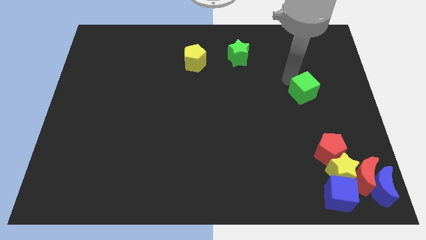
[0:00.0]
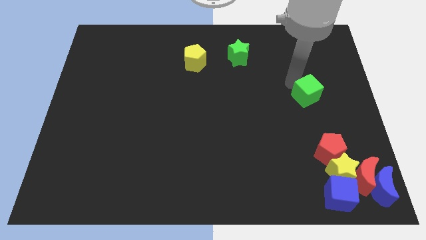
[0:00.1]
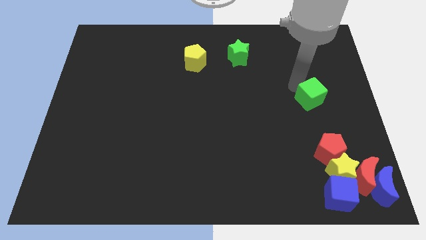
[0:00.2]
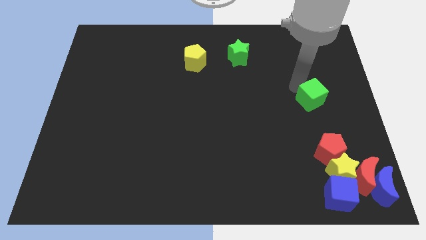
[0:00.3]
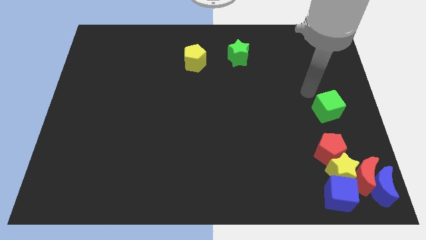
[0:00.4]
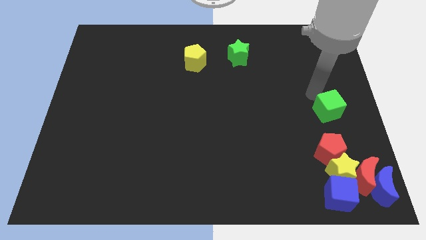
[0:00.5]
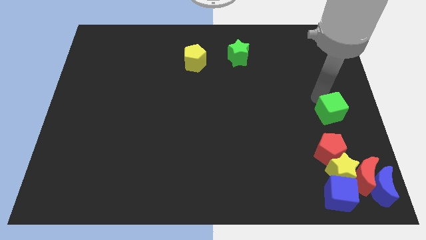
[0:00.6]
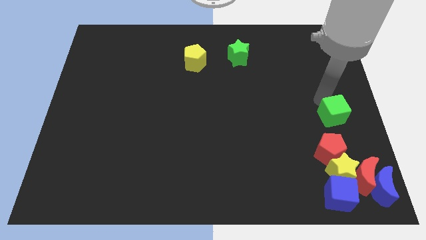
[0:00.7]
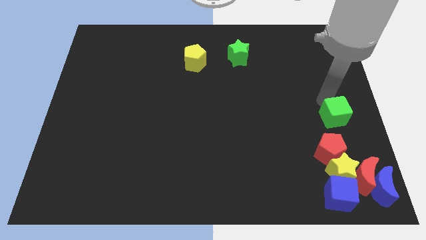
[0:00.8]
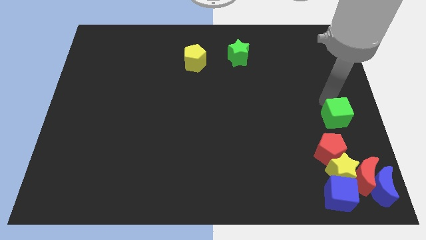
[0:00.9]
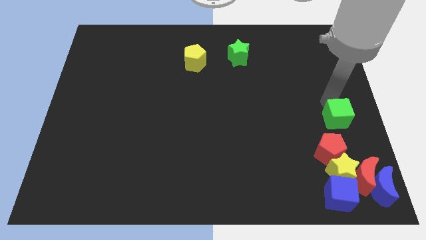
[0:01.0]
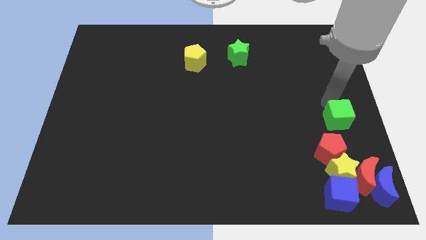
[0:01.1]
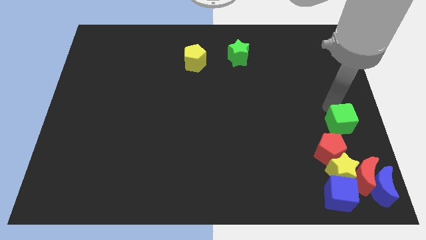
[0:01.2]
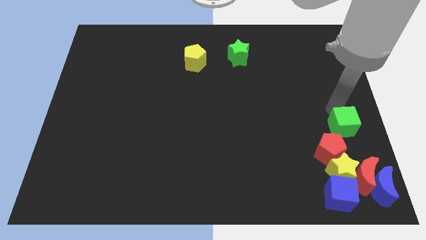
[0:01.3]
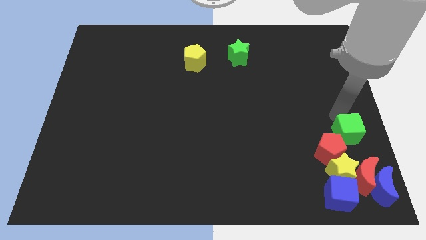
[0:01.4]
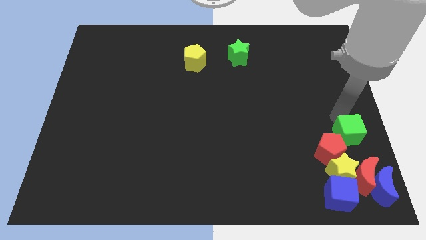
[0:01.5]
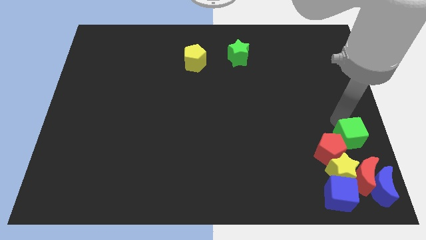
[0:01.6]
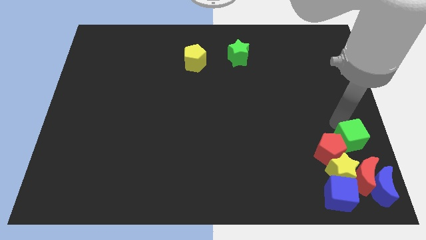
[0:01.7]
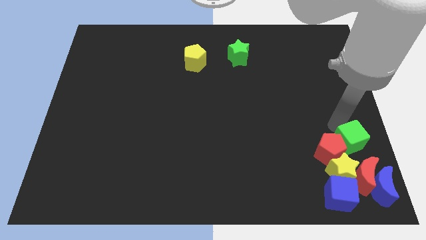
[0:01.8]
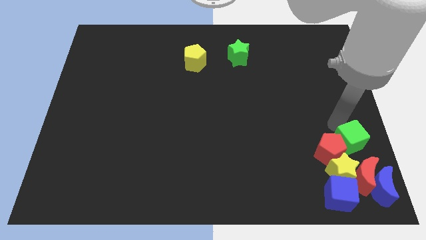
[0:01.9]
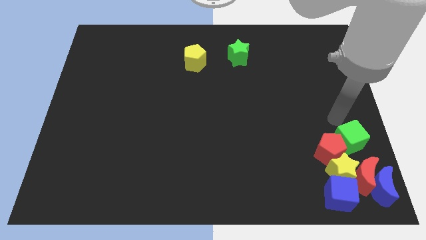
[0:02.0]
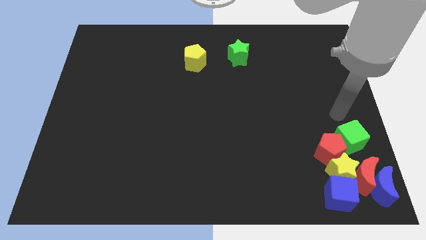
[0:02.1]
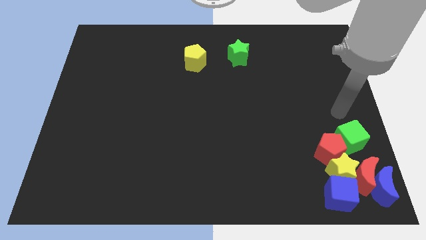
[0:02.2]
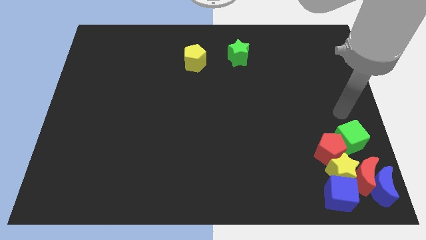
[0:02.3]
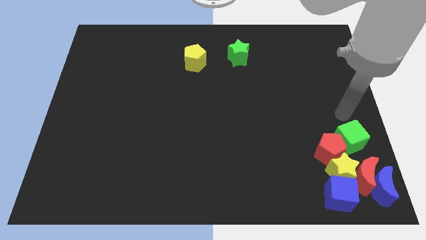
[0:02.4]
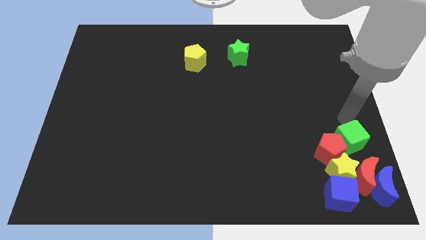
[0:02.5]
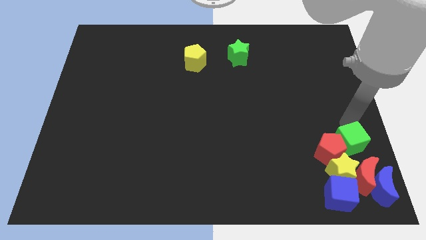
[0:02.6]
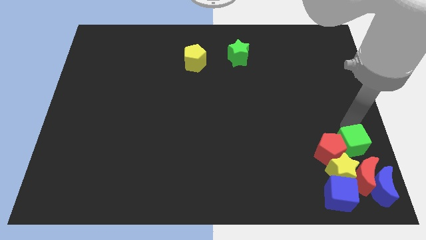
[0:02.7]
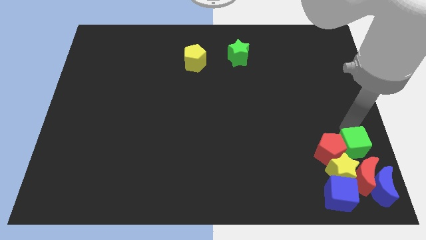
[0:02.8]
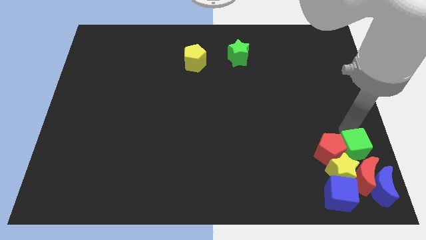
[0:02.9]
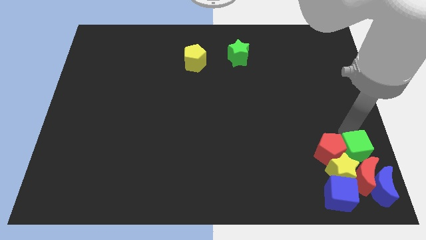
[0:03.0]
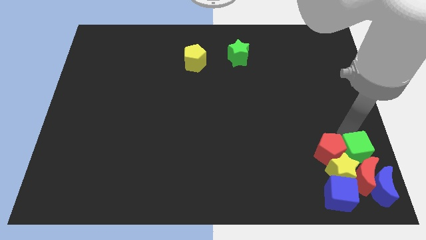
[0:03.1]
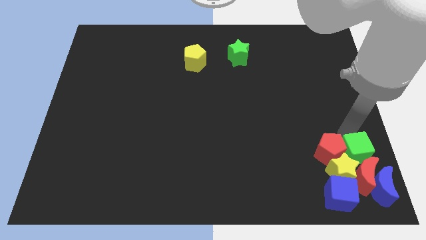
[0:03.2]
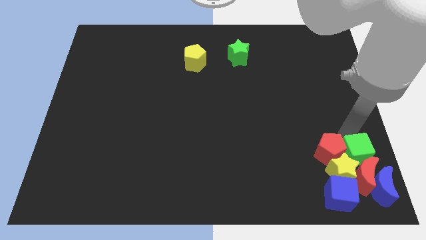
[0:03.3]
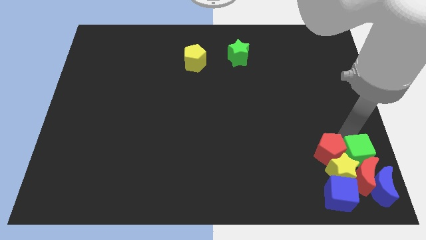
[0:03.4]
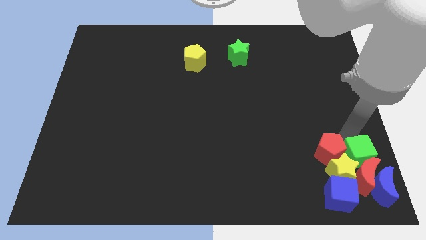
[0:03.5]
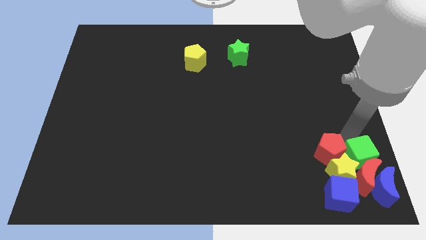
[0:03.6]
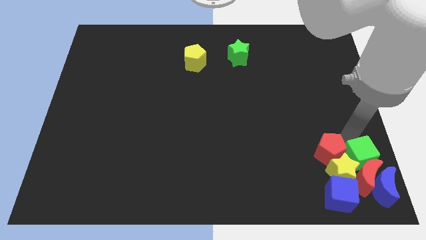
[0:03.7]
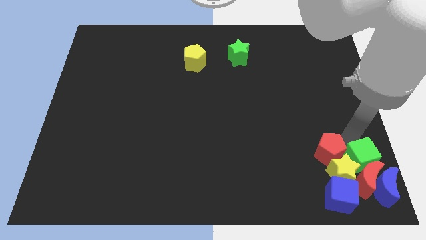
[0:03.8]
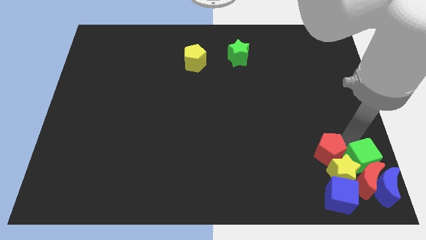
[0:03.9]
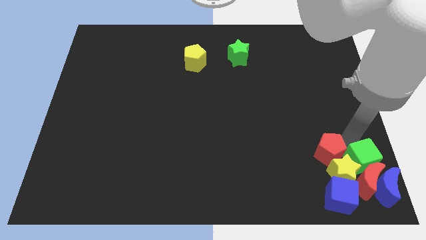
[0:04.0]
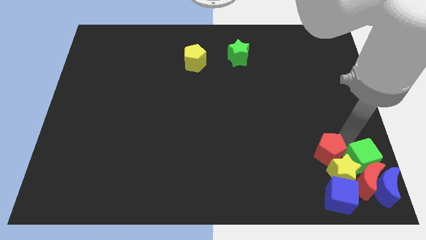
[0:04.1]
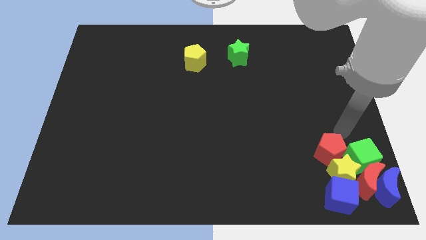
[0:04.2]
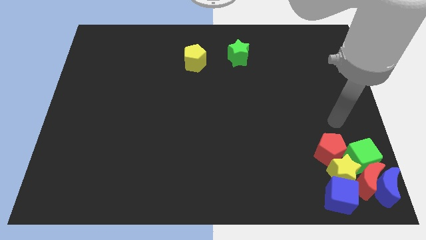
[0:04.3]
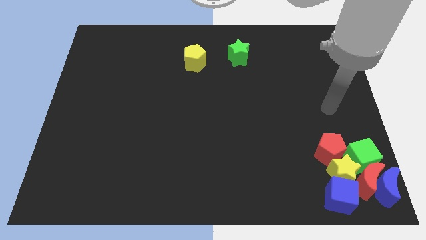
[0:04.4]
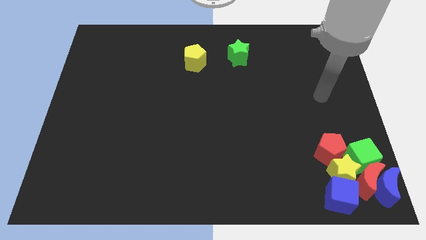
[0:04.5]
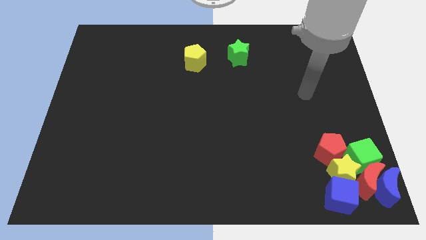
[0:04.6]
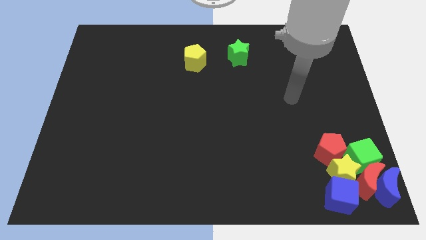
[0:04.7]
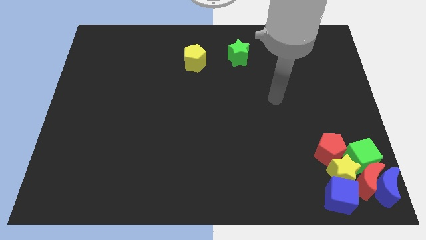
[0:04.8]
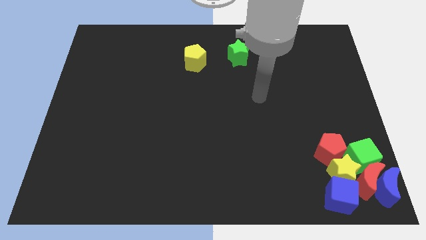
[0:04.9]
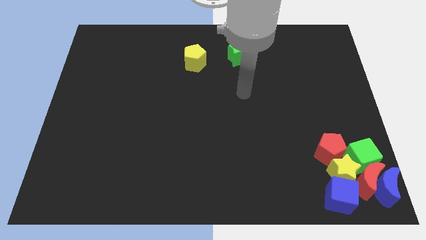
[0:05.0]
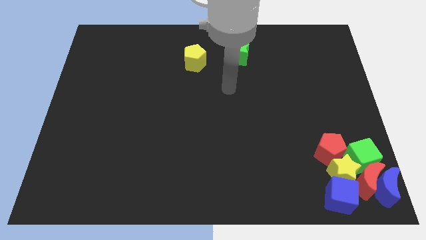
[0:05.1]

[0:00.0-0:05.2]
push green cube into red moon

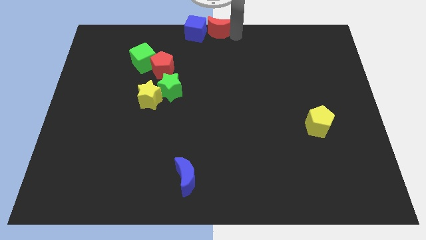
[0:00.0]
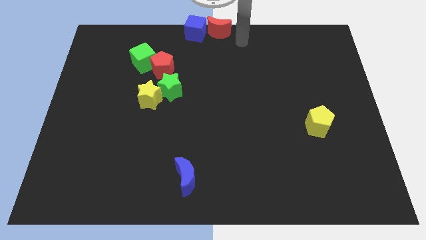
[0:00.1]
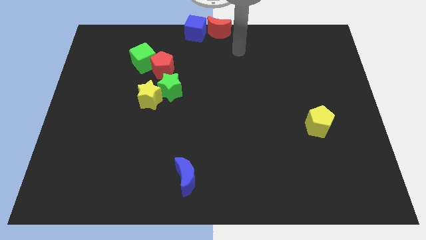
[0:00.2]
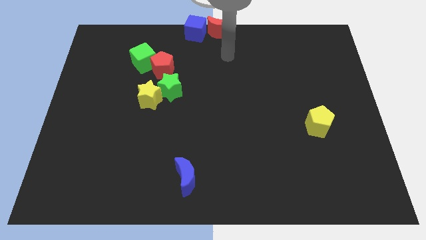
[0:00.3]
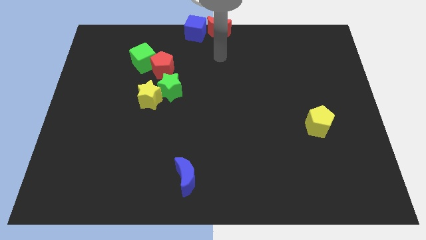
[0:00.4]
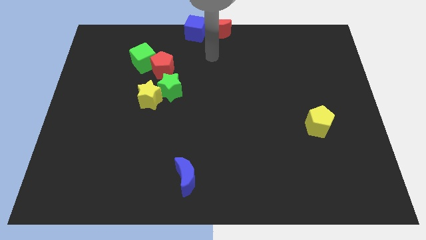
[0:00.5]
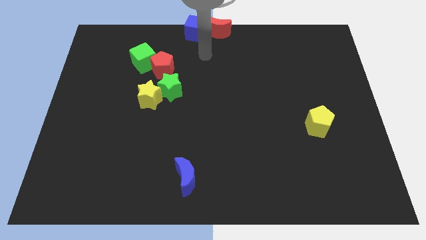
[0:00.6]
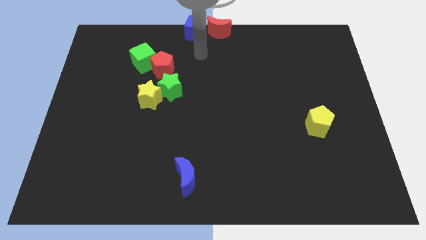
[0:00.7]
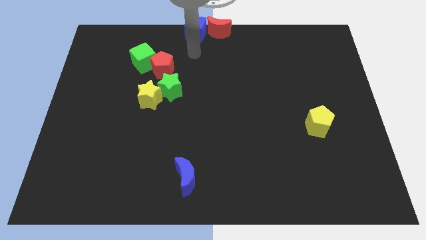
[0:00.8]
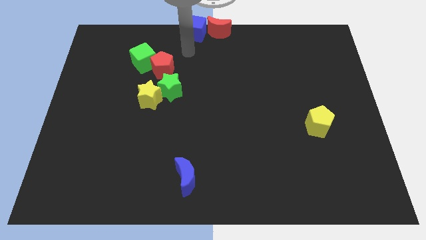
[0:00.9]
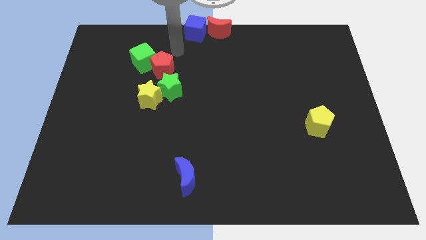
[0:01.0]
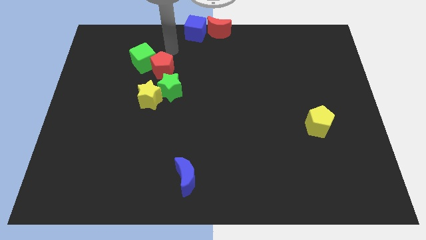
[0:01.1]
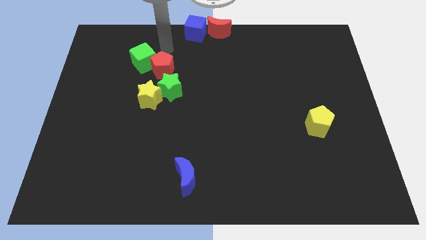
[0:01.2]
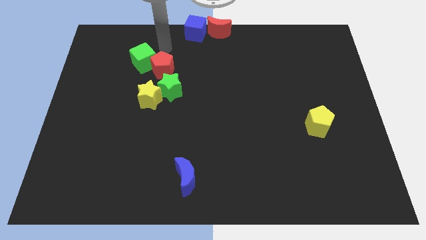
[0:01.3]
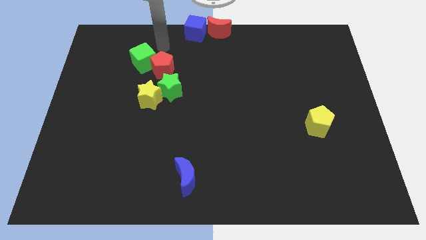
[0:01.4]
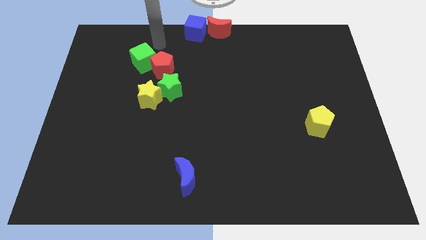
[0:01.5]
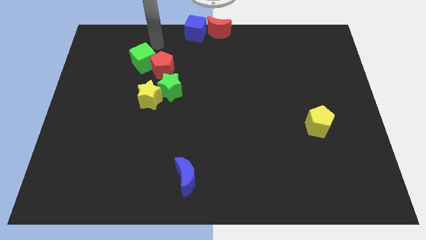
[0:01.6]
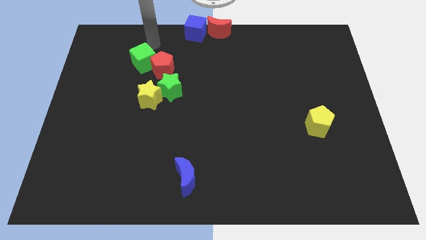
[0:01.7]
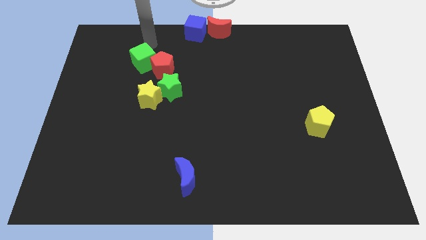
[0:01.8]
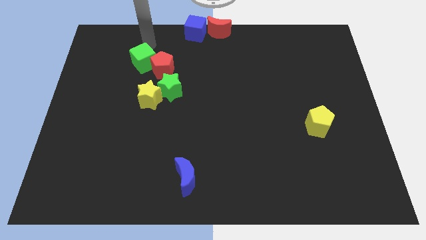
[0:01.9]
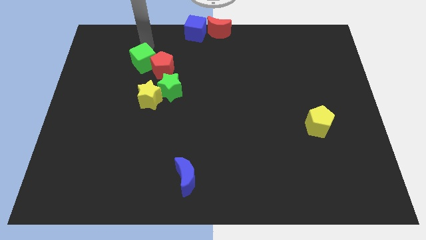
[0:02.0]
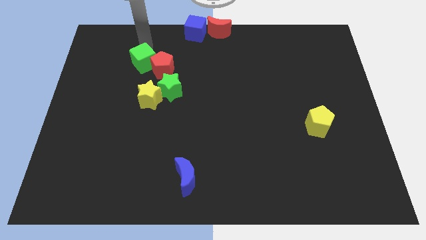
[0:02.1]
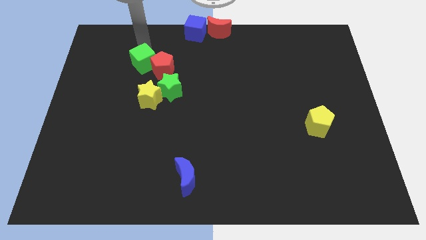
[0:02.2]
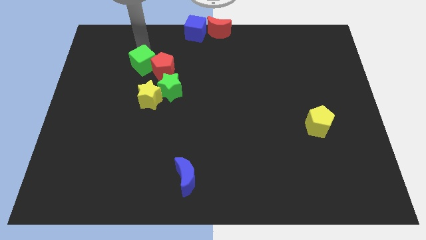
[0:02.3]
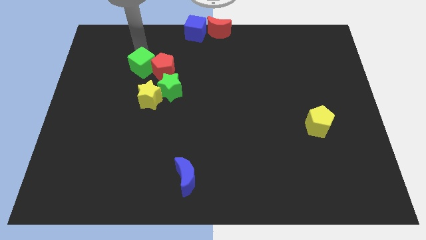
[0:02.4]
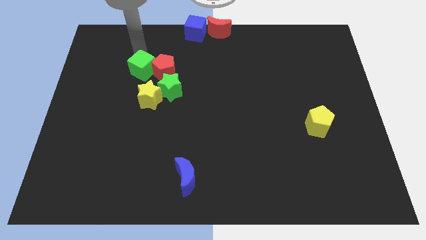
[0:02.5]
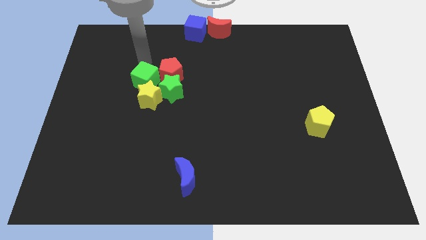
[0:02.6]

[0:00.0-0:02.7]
push the green cube into the yellow star

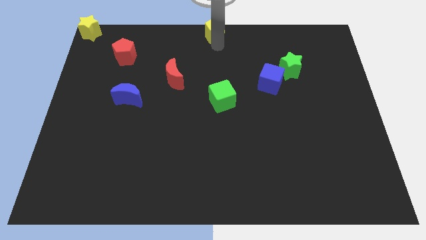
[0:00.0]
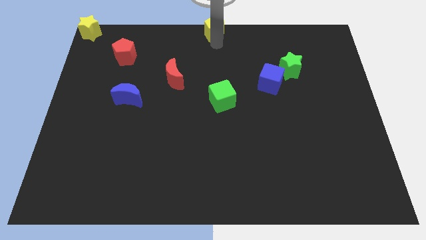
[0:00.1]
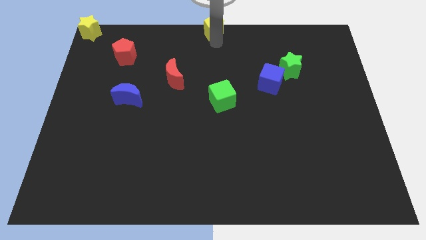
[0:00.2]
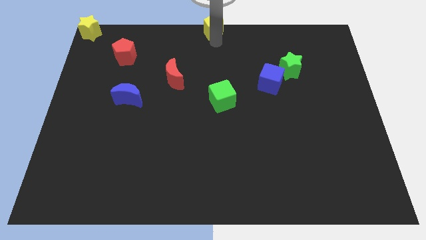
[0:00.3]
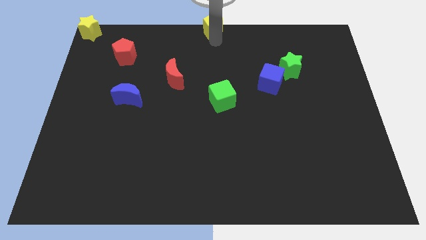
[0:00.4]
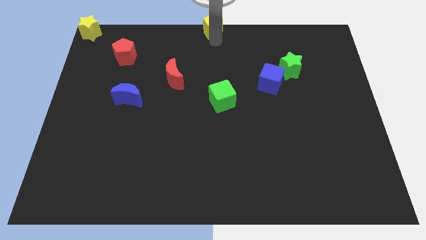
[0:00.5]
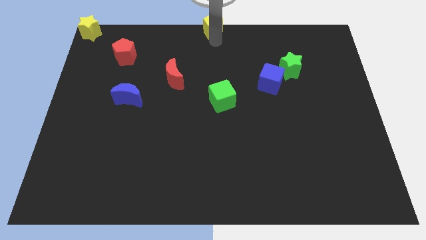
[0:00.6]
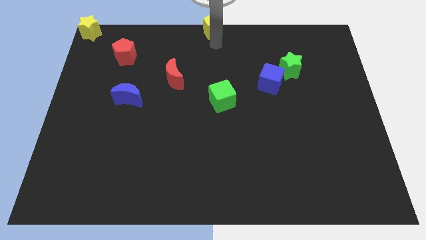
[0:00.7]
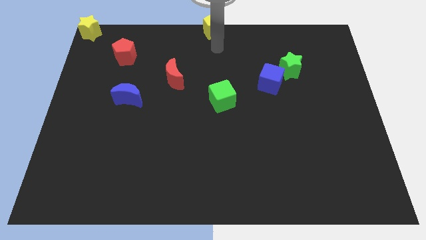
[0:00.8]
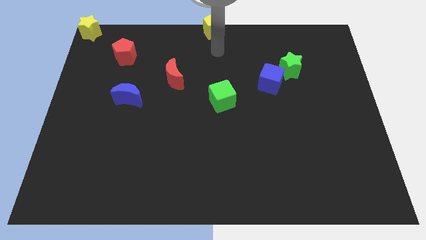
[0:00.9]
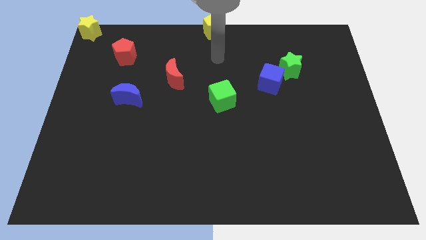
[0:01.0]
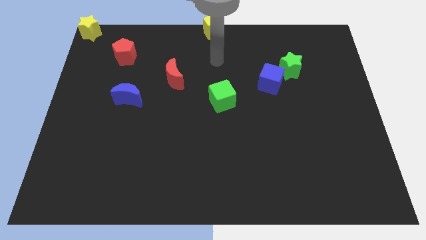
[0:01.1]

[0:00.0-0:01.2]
slightly move the yellow pentagon upward
